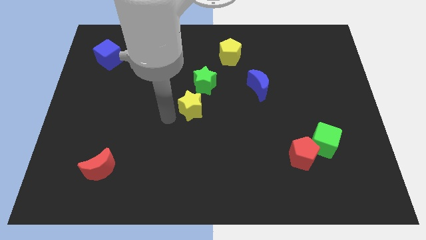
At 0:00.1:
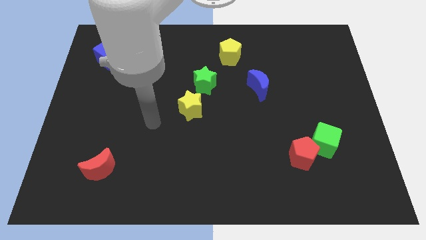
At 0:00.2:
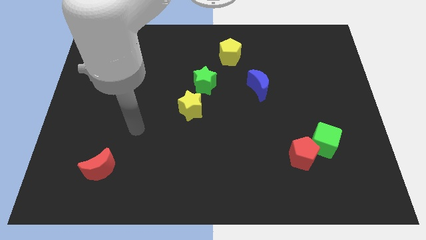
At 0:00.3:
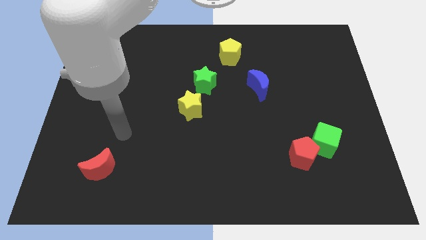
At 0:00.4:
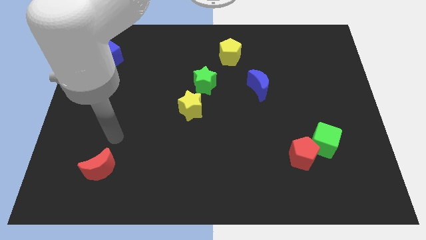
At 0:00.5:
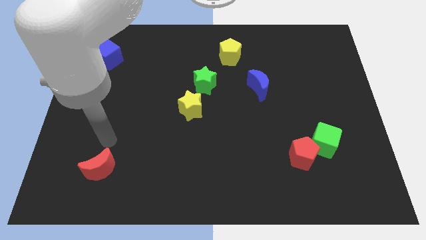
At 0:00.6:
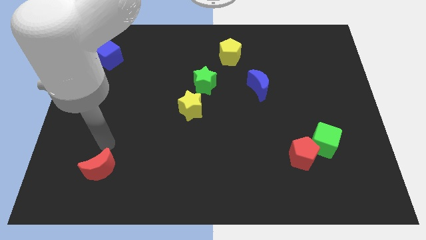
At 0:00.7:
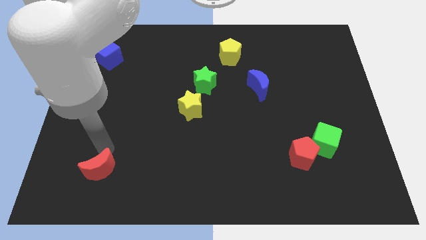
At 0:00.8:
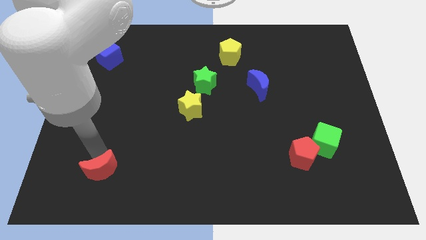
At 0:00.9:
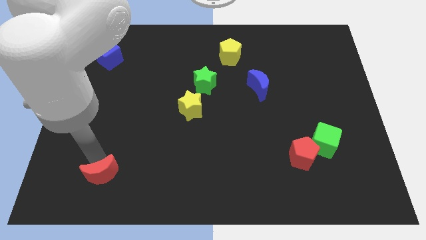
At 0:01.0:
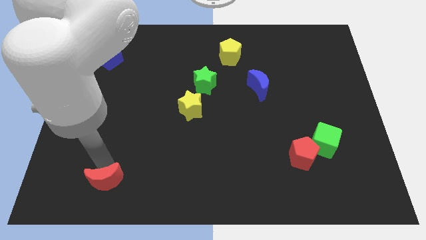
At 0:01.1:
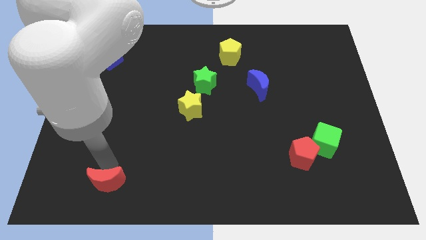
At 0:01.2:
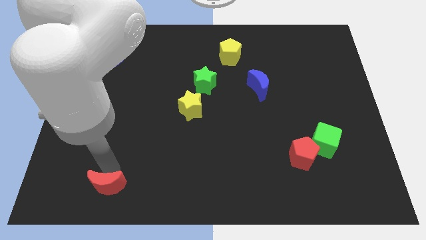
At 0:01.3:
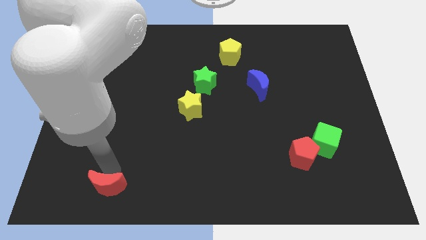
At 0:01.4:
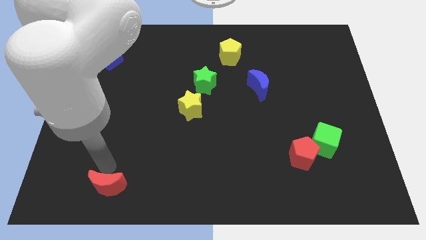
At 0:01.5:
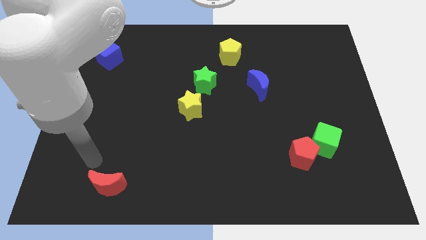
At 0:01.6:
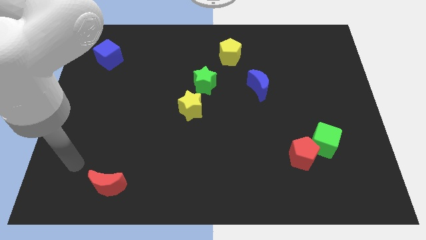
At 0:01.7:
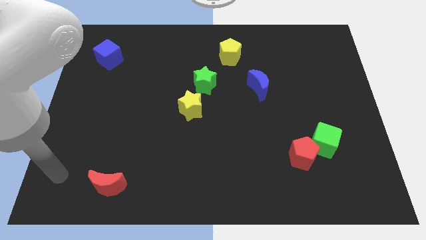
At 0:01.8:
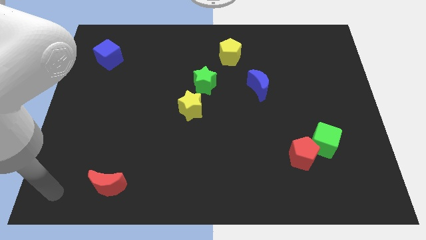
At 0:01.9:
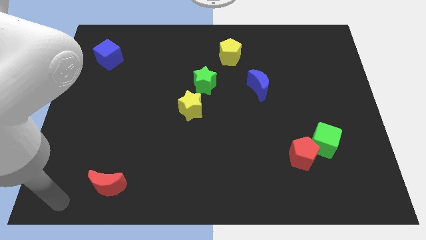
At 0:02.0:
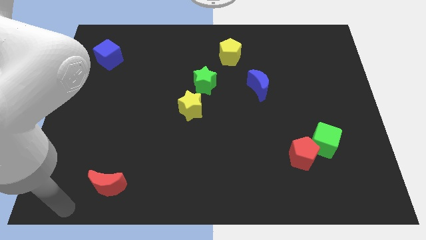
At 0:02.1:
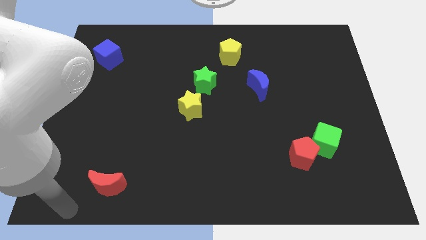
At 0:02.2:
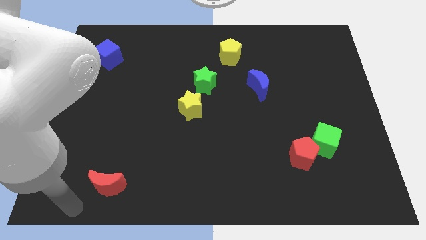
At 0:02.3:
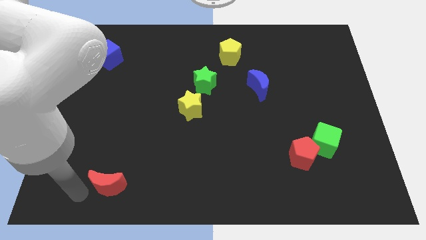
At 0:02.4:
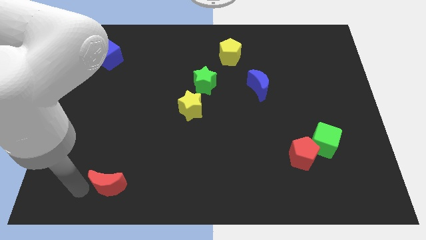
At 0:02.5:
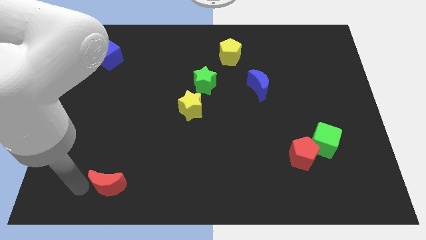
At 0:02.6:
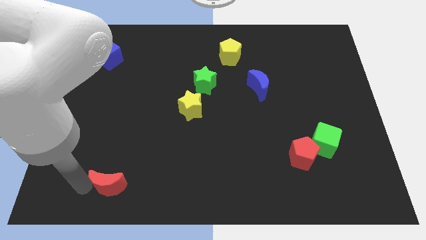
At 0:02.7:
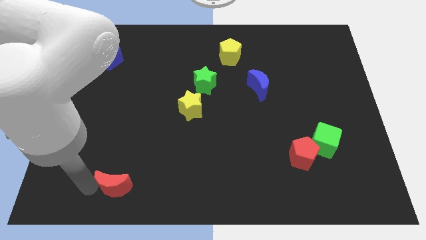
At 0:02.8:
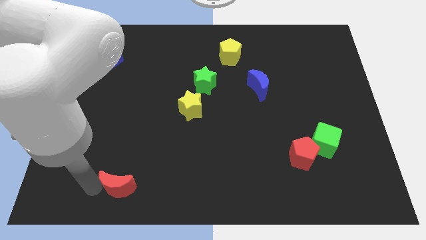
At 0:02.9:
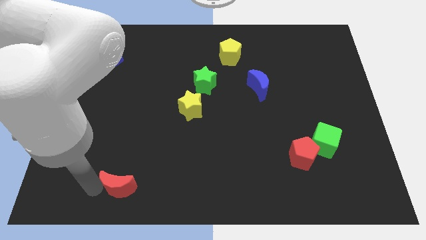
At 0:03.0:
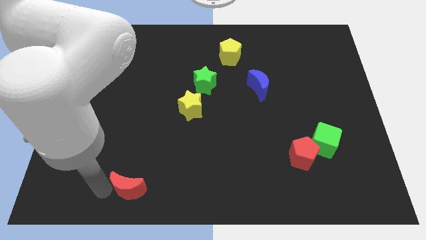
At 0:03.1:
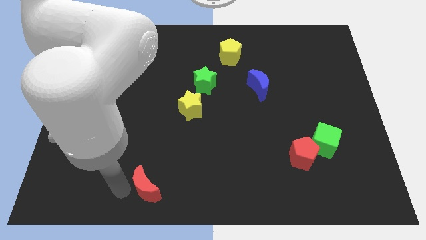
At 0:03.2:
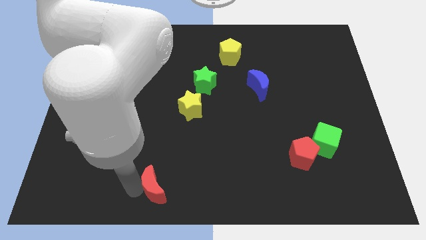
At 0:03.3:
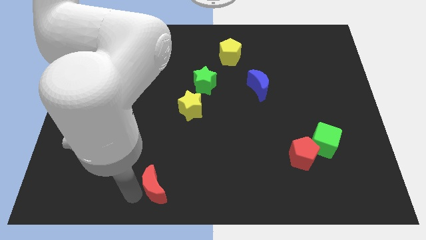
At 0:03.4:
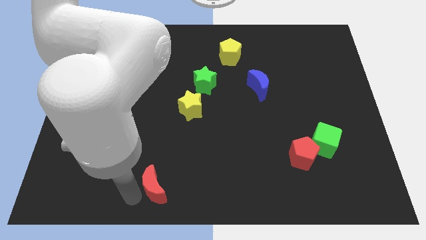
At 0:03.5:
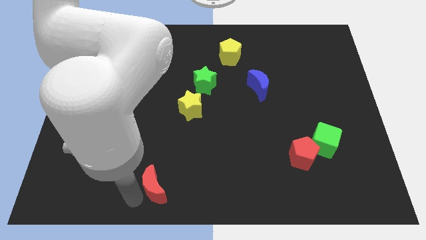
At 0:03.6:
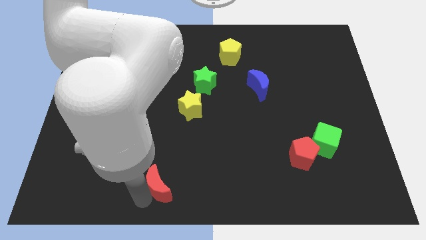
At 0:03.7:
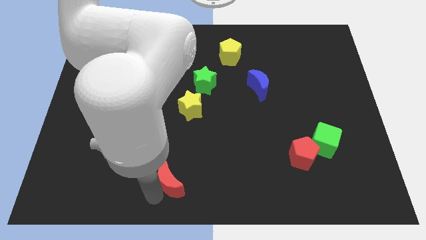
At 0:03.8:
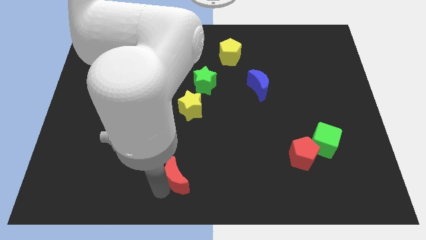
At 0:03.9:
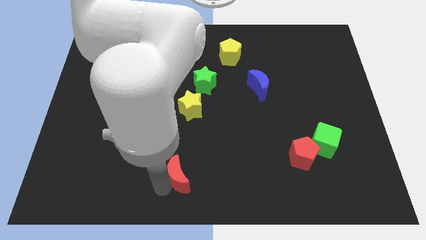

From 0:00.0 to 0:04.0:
move the red crescent towards bottom center

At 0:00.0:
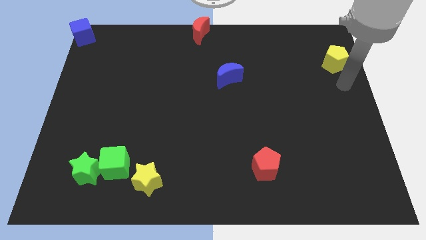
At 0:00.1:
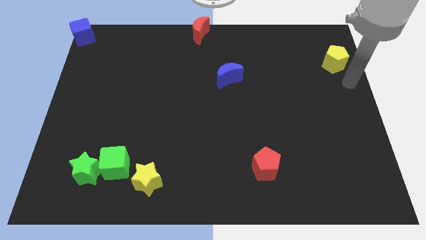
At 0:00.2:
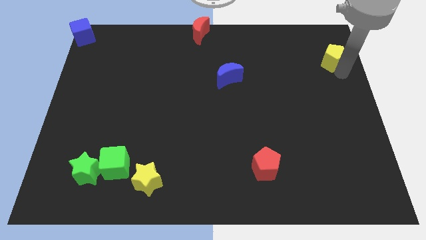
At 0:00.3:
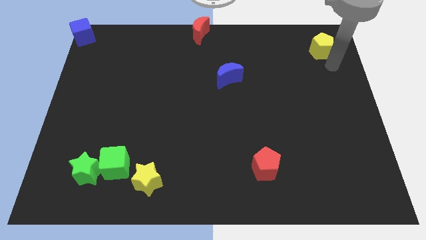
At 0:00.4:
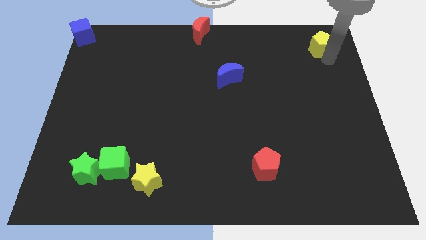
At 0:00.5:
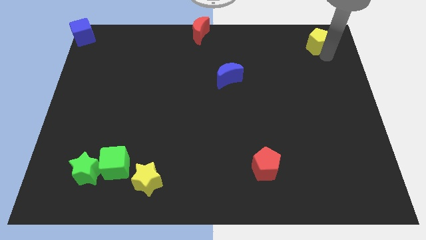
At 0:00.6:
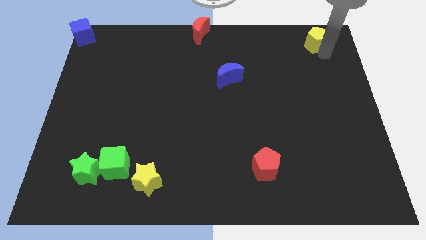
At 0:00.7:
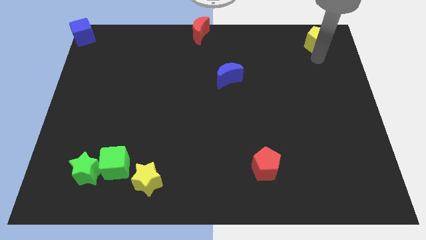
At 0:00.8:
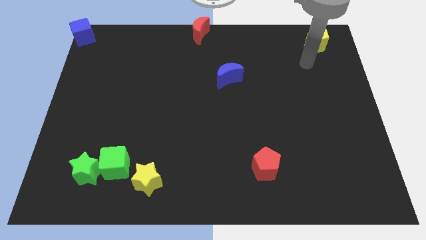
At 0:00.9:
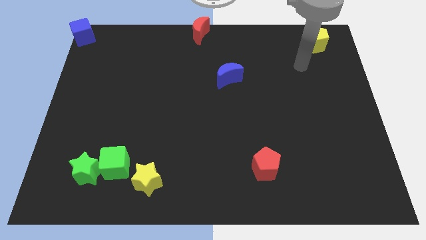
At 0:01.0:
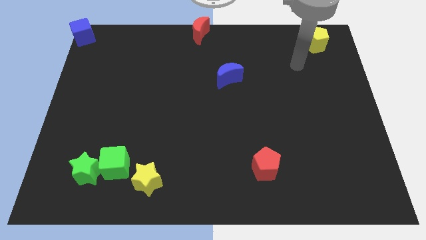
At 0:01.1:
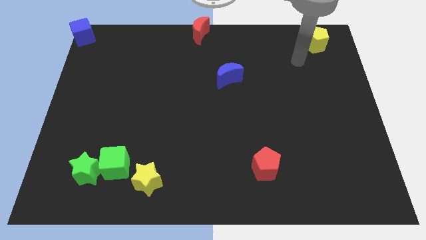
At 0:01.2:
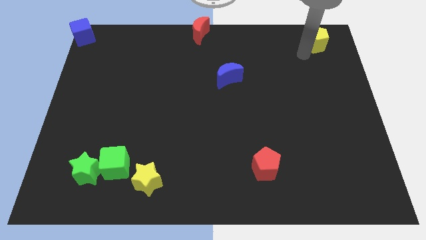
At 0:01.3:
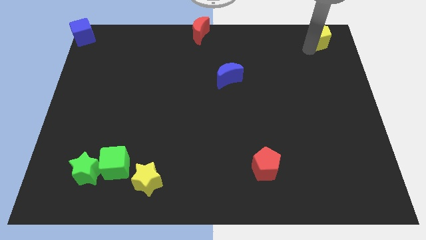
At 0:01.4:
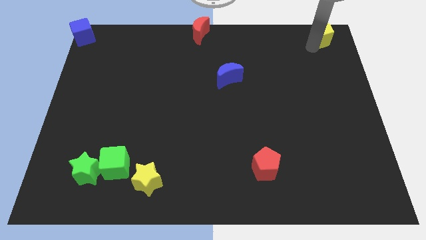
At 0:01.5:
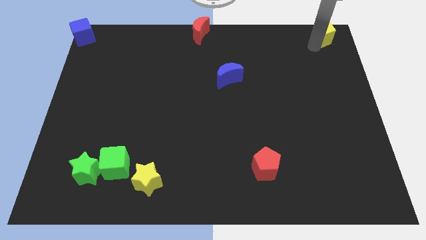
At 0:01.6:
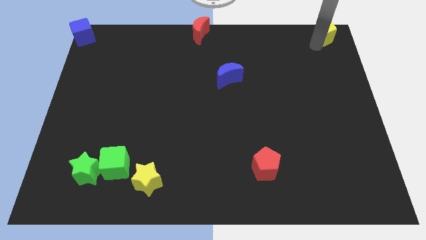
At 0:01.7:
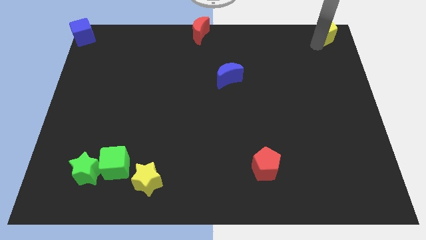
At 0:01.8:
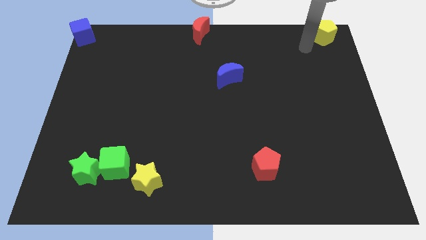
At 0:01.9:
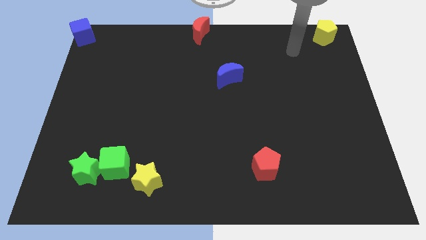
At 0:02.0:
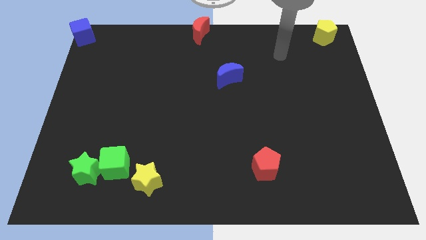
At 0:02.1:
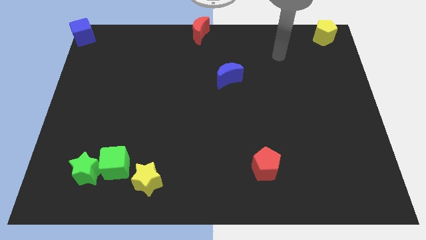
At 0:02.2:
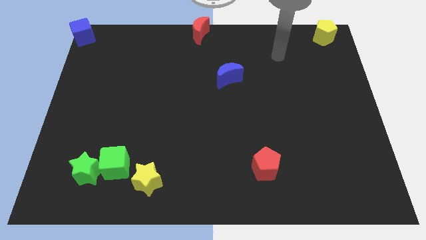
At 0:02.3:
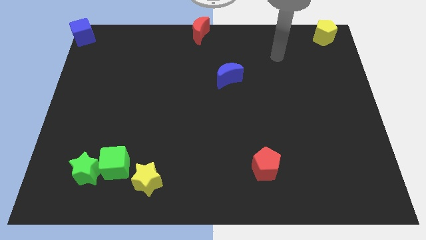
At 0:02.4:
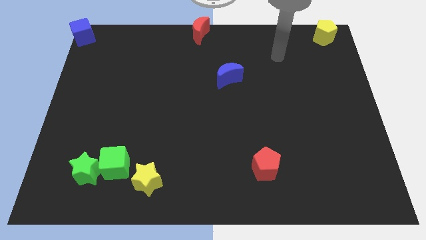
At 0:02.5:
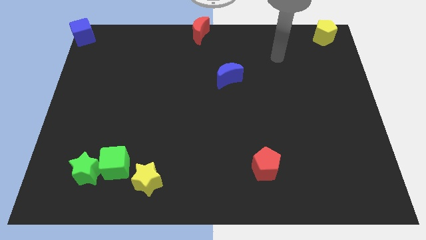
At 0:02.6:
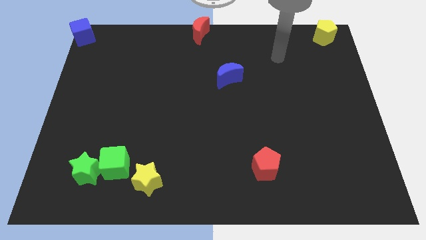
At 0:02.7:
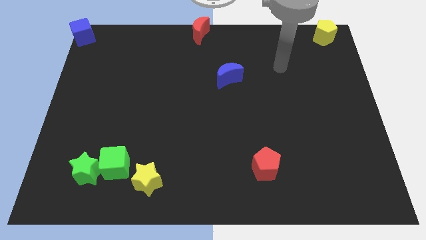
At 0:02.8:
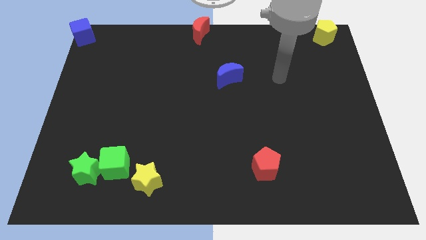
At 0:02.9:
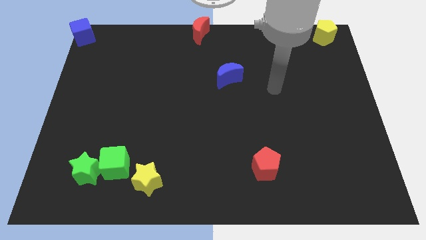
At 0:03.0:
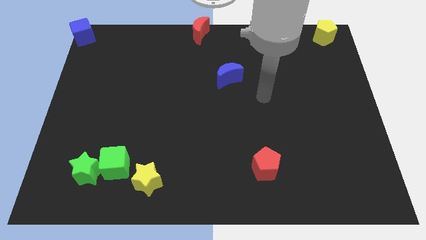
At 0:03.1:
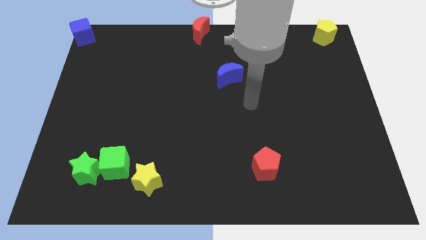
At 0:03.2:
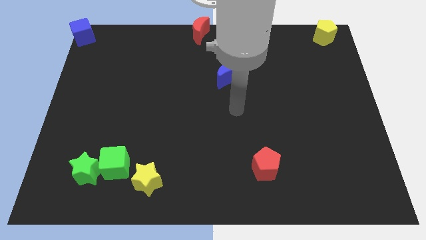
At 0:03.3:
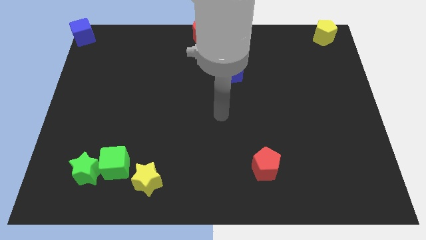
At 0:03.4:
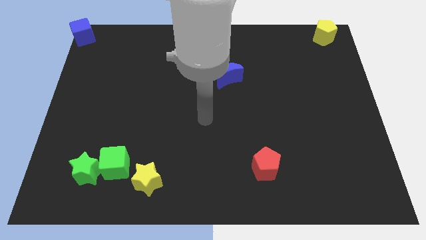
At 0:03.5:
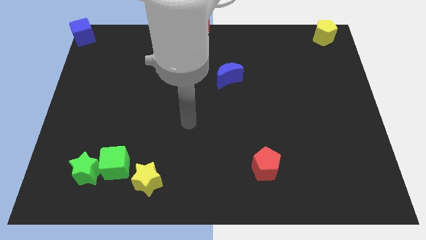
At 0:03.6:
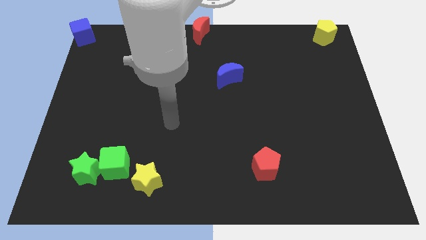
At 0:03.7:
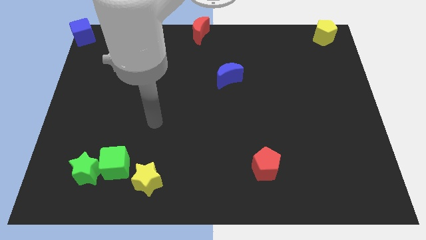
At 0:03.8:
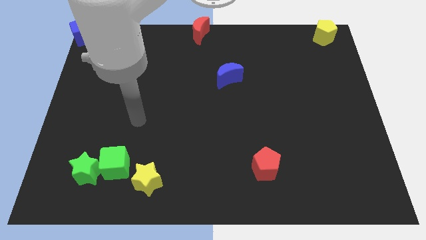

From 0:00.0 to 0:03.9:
slightly push the yellow pentagon to the top right corner of the board

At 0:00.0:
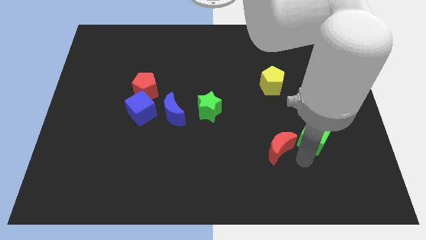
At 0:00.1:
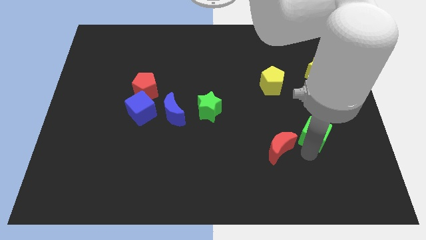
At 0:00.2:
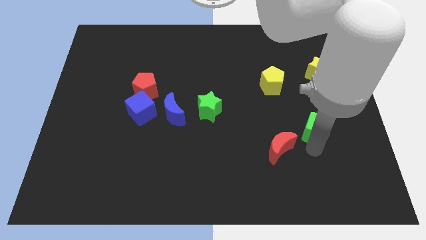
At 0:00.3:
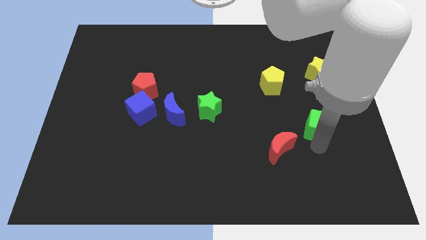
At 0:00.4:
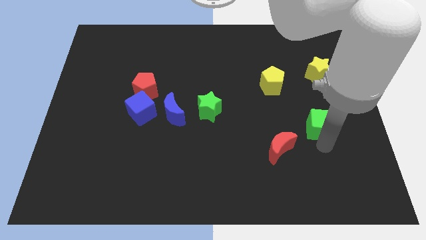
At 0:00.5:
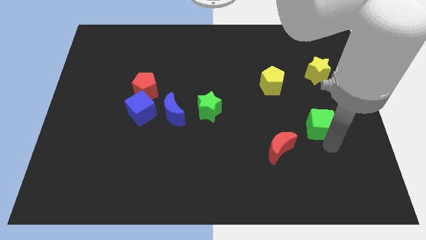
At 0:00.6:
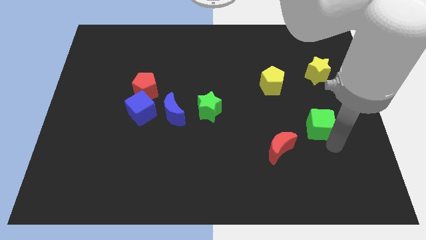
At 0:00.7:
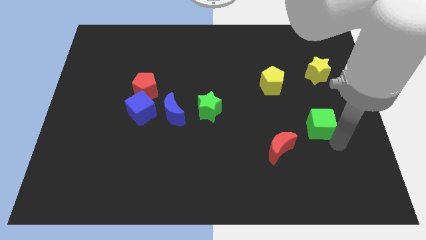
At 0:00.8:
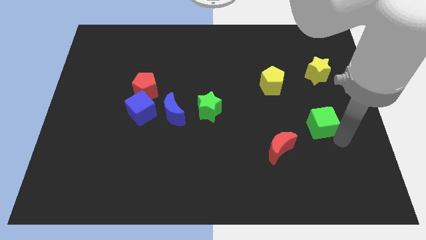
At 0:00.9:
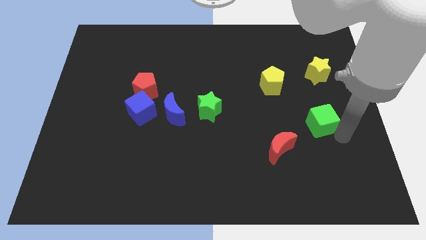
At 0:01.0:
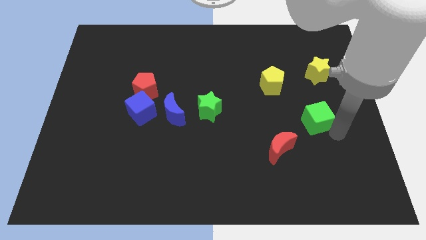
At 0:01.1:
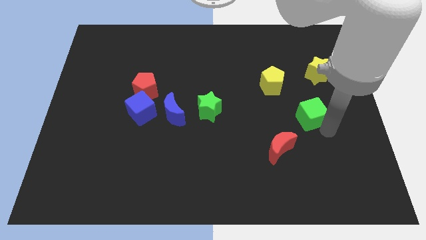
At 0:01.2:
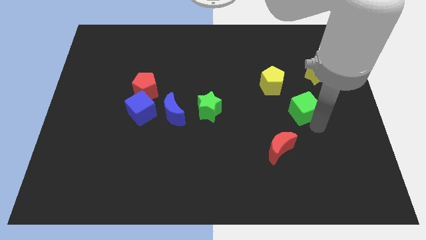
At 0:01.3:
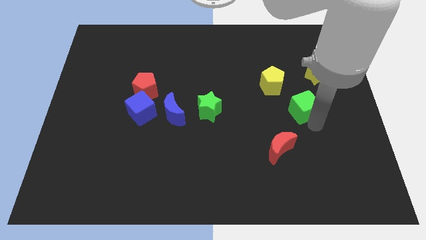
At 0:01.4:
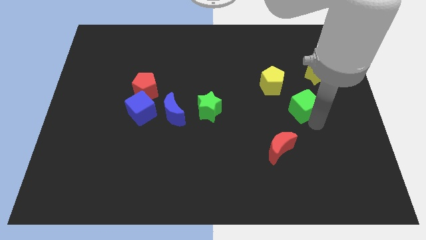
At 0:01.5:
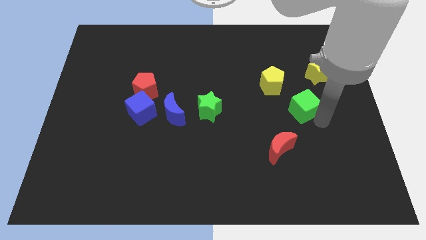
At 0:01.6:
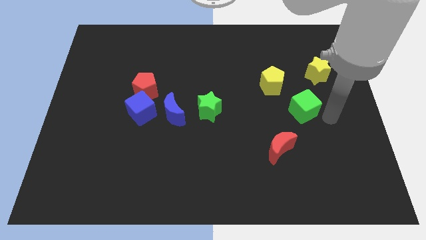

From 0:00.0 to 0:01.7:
separate green cube from red moon
